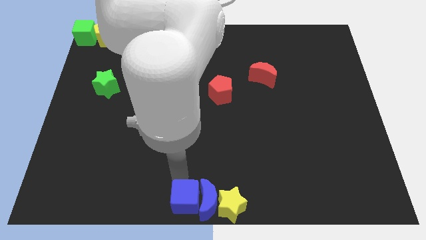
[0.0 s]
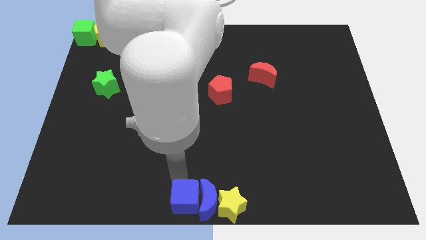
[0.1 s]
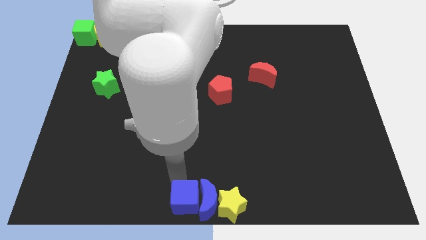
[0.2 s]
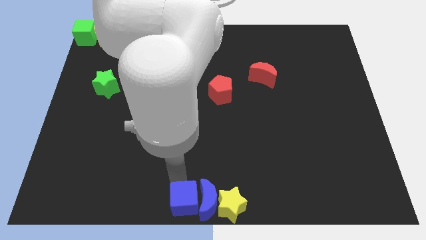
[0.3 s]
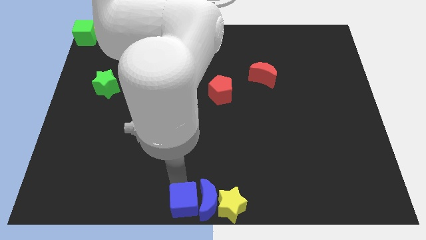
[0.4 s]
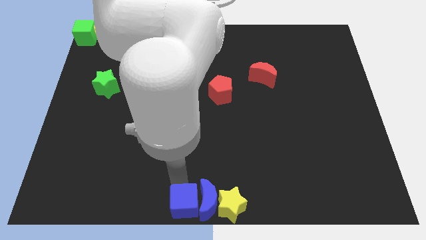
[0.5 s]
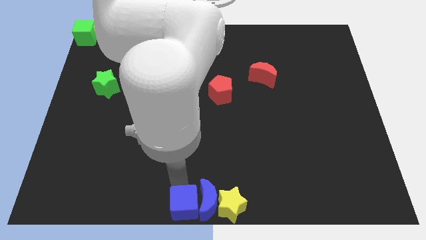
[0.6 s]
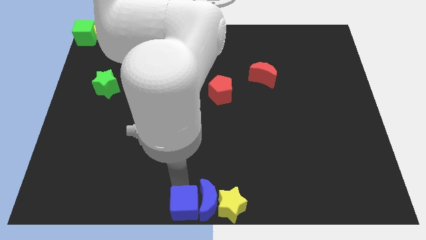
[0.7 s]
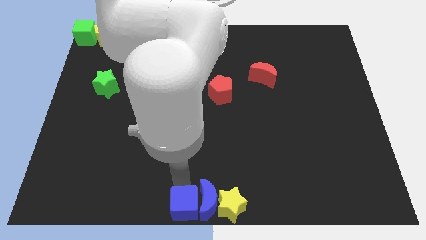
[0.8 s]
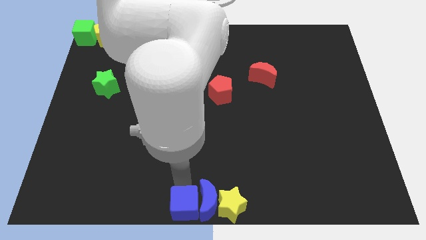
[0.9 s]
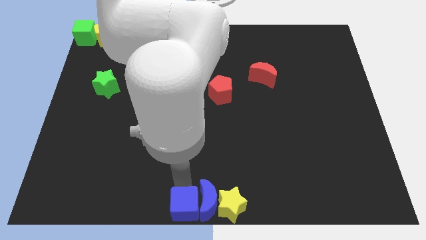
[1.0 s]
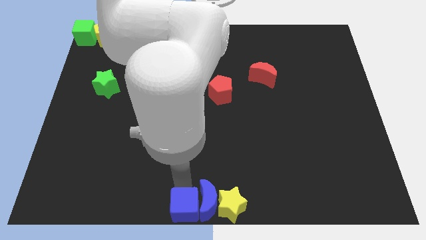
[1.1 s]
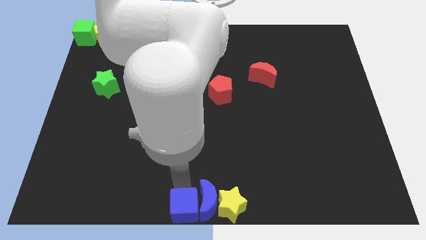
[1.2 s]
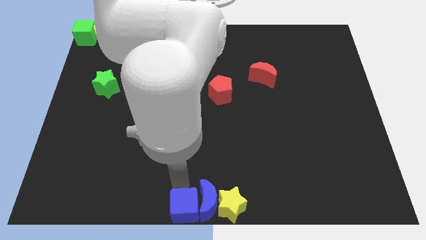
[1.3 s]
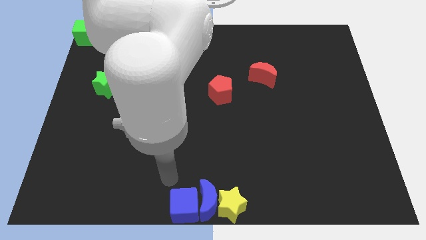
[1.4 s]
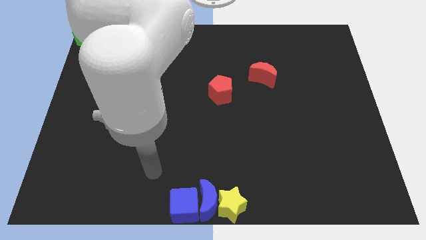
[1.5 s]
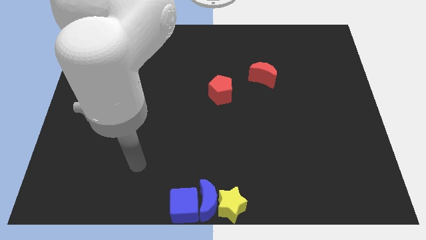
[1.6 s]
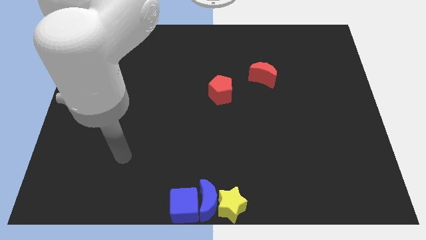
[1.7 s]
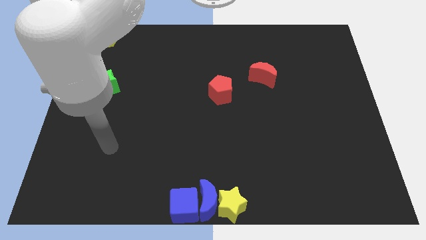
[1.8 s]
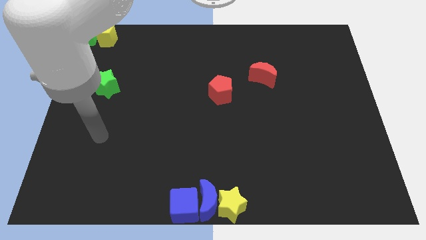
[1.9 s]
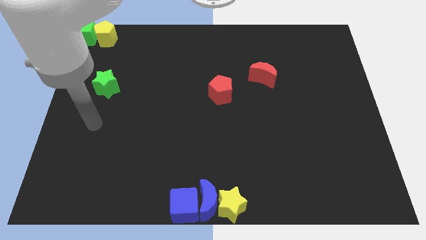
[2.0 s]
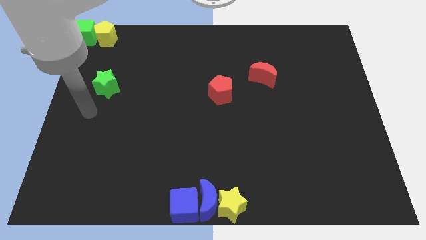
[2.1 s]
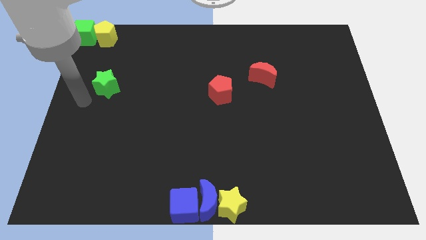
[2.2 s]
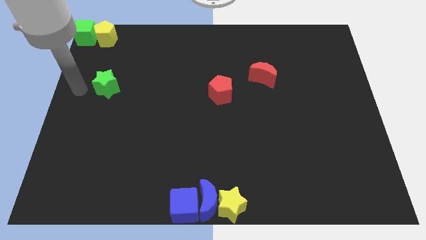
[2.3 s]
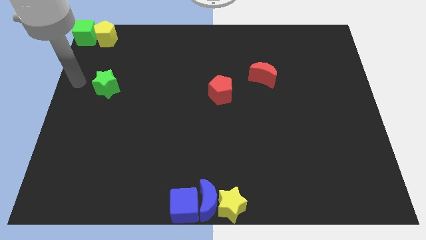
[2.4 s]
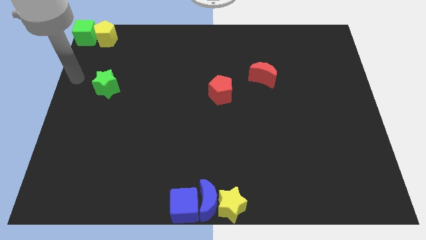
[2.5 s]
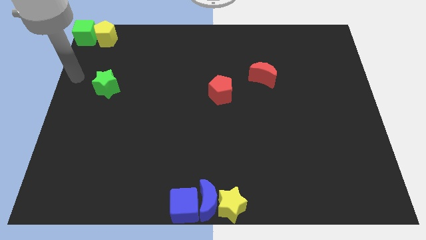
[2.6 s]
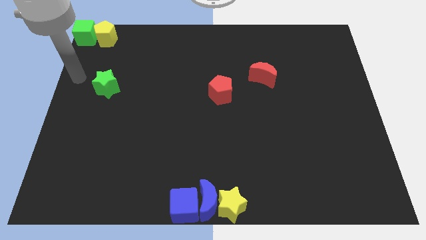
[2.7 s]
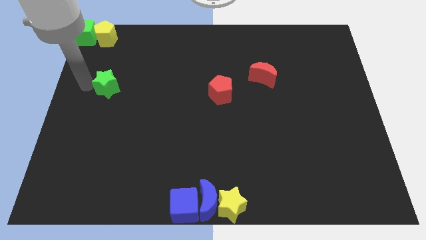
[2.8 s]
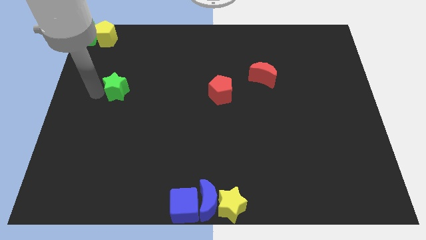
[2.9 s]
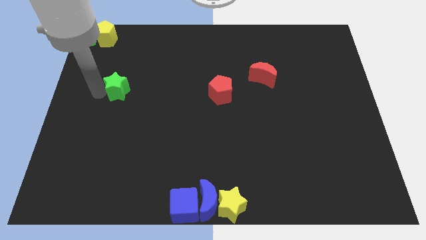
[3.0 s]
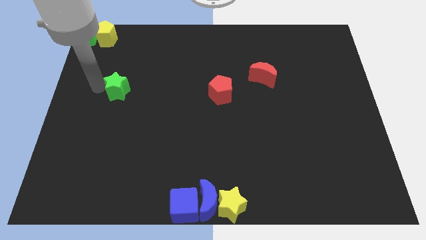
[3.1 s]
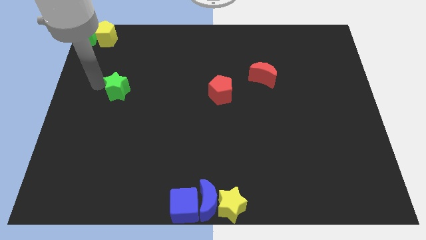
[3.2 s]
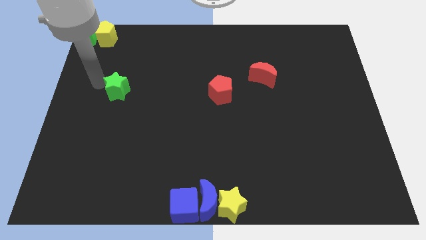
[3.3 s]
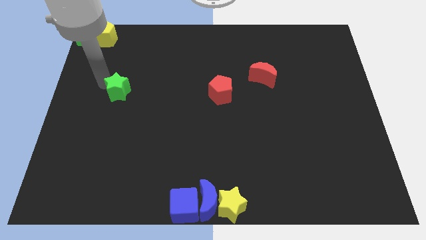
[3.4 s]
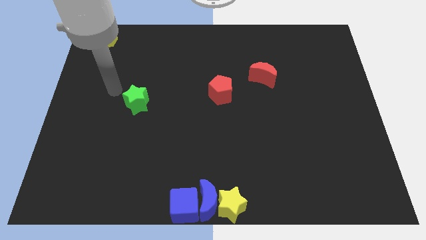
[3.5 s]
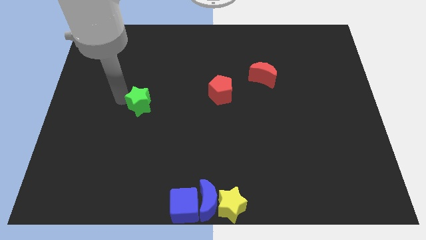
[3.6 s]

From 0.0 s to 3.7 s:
push the blue cube and push the green star downwards

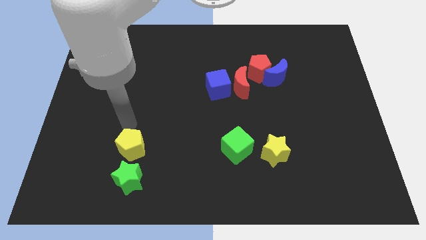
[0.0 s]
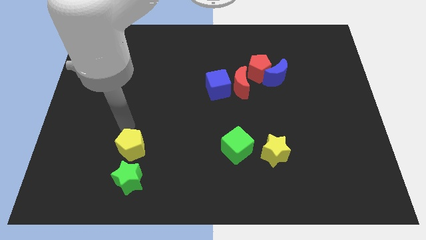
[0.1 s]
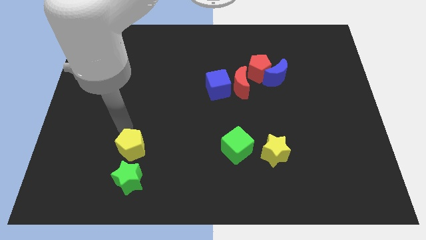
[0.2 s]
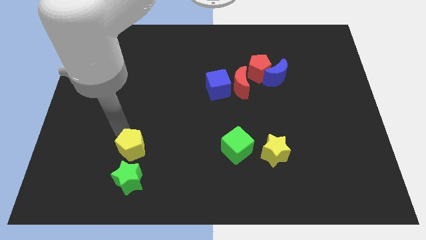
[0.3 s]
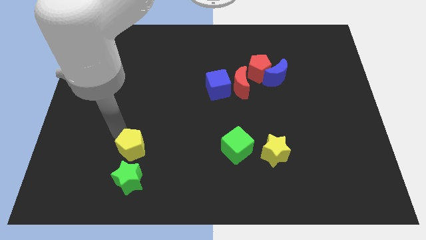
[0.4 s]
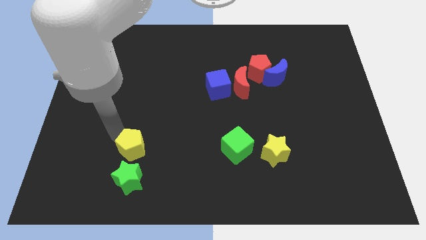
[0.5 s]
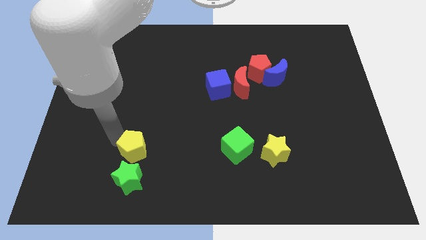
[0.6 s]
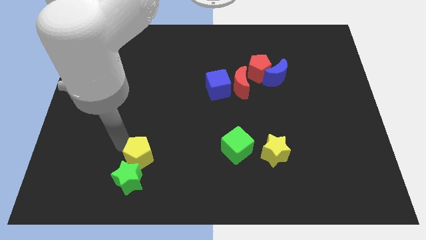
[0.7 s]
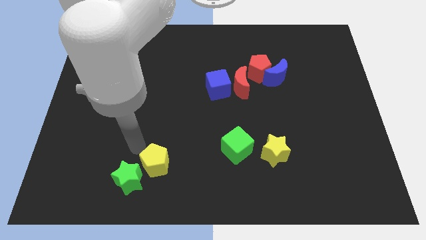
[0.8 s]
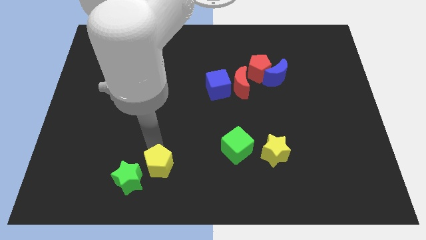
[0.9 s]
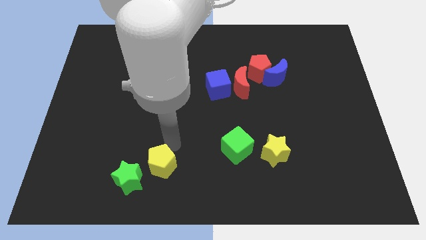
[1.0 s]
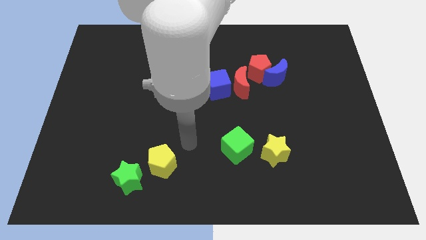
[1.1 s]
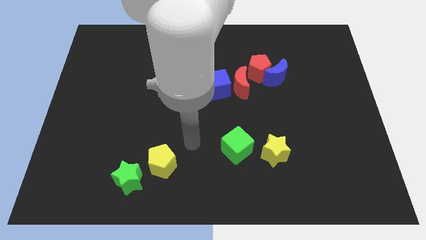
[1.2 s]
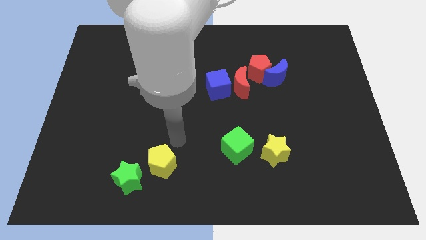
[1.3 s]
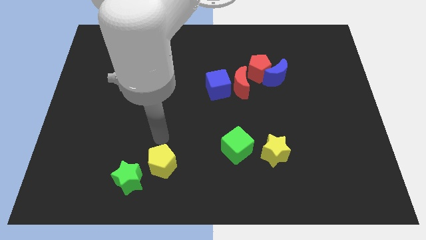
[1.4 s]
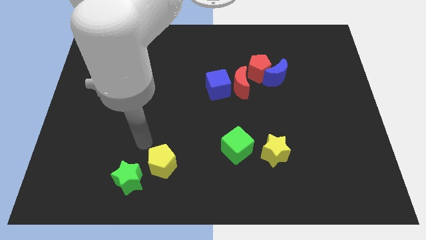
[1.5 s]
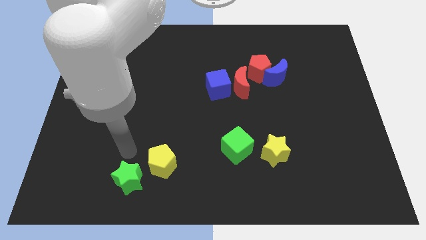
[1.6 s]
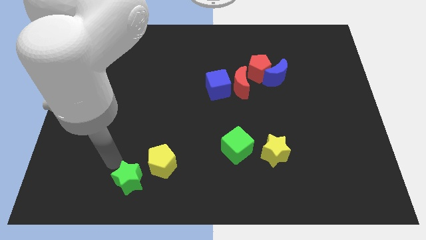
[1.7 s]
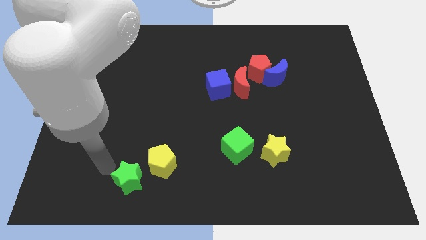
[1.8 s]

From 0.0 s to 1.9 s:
slide the yellow pentagon diagonally top right to the green star

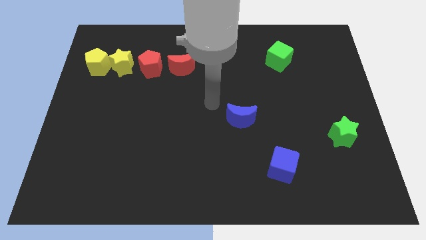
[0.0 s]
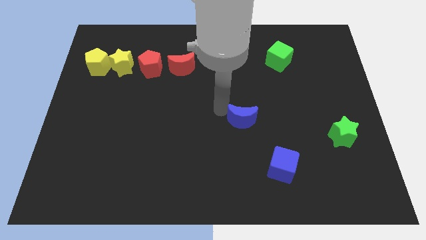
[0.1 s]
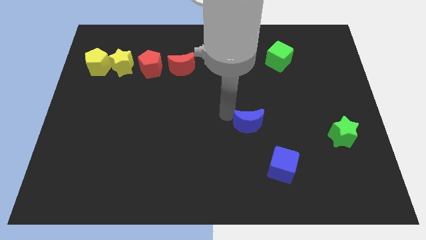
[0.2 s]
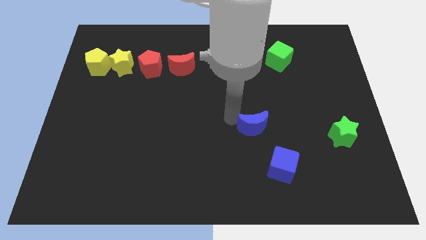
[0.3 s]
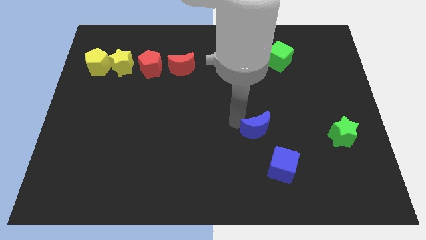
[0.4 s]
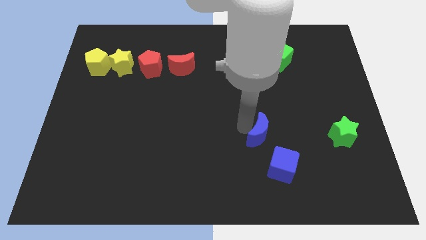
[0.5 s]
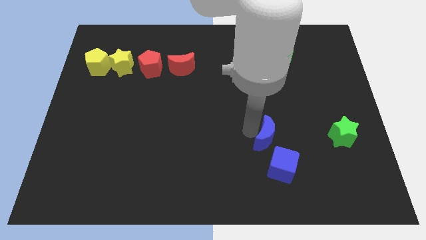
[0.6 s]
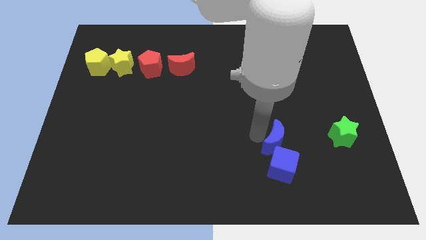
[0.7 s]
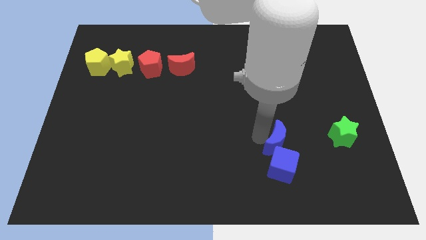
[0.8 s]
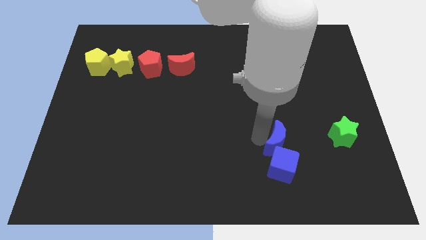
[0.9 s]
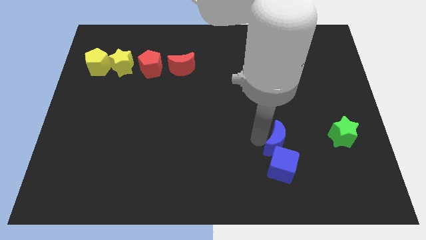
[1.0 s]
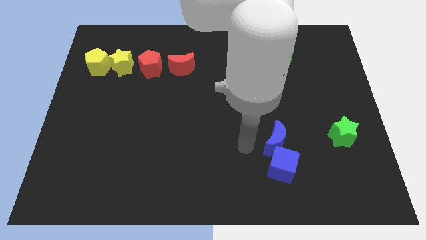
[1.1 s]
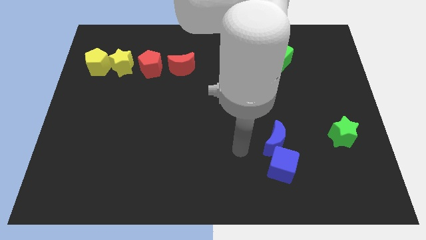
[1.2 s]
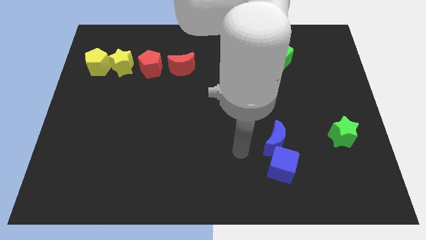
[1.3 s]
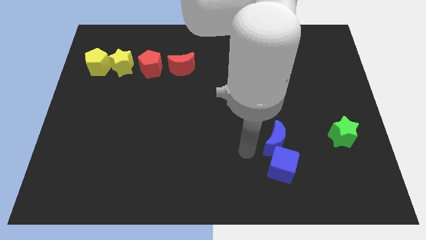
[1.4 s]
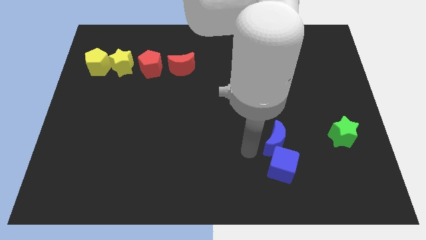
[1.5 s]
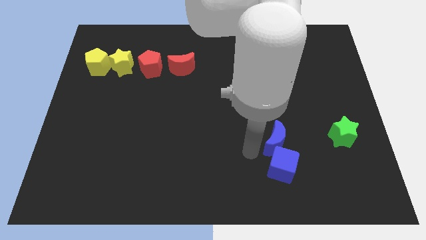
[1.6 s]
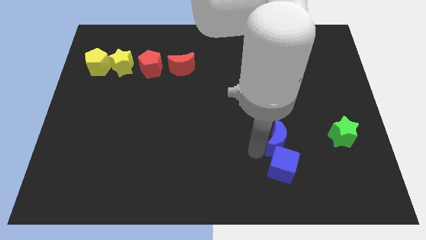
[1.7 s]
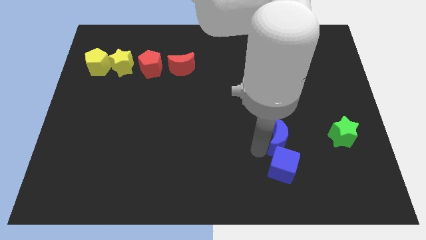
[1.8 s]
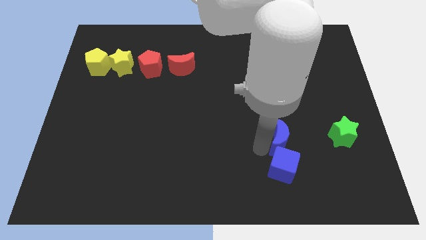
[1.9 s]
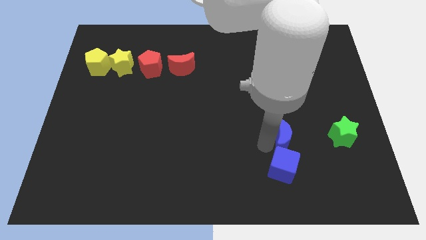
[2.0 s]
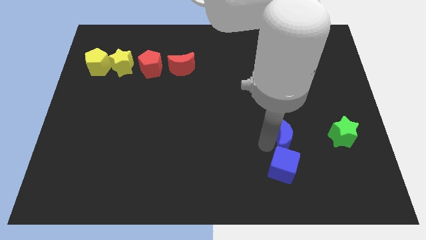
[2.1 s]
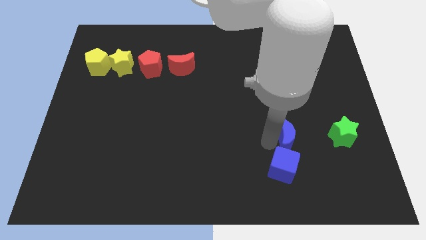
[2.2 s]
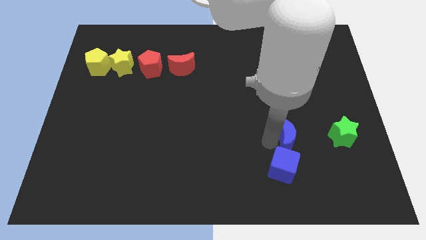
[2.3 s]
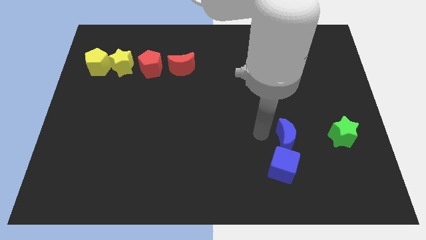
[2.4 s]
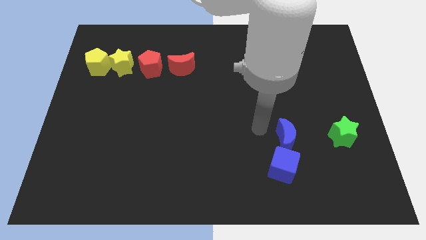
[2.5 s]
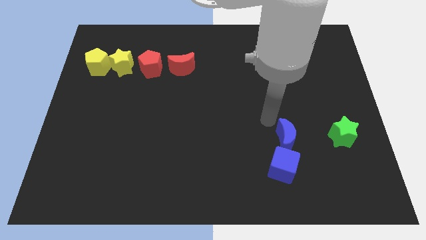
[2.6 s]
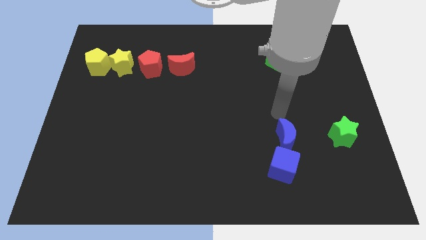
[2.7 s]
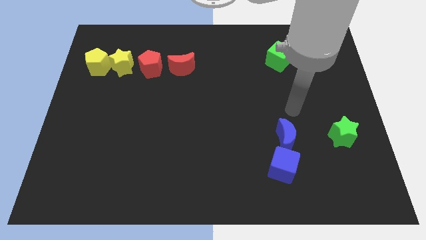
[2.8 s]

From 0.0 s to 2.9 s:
push the blue moon to the top side of the blue cube

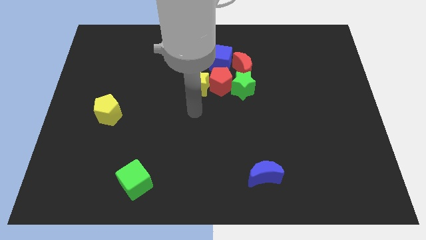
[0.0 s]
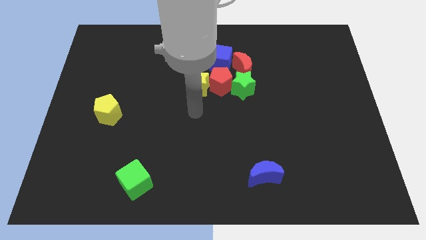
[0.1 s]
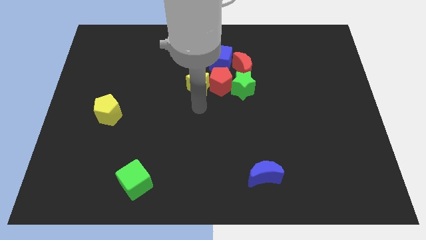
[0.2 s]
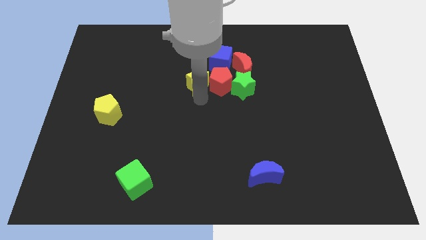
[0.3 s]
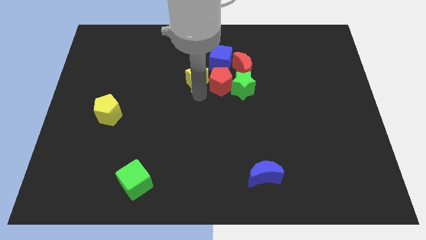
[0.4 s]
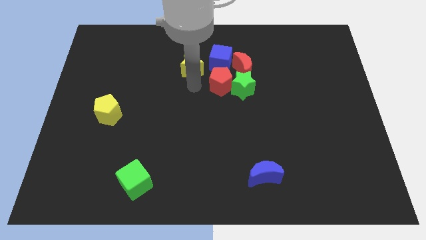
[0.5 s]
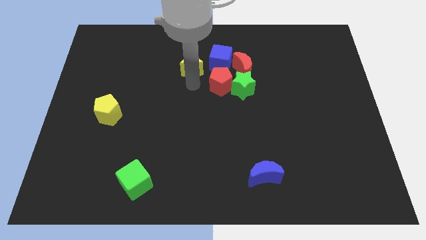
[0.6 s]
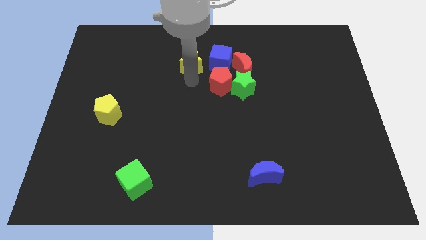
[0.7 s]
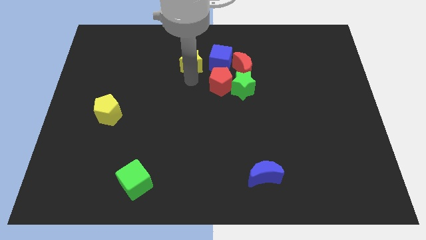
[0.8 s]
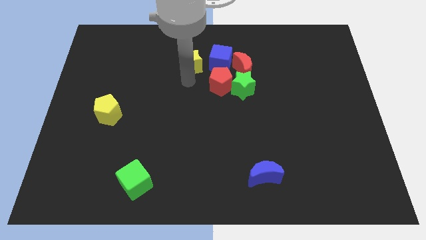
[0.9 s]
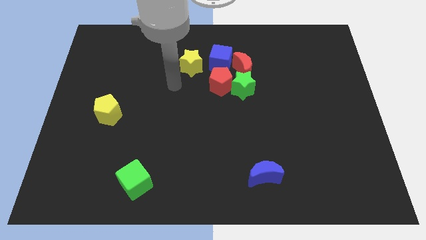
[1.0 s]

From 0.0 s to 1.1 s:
push the yellow star away from the red pentagon
